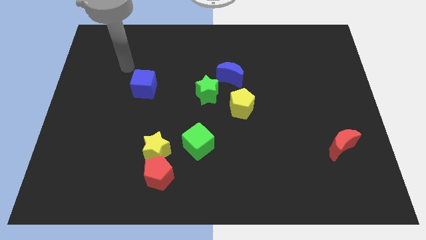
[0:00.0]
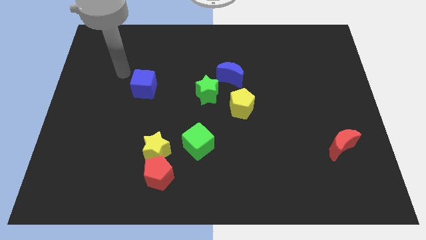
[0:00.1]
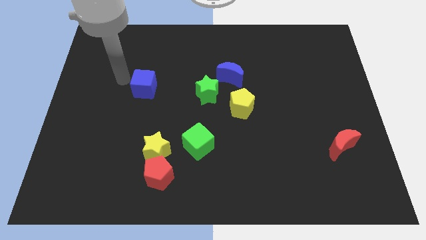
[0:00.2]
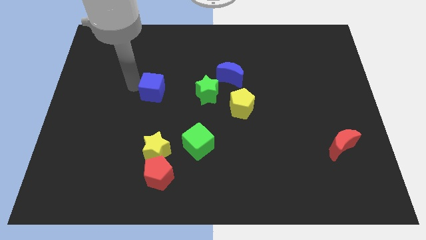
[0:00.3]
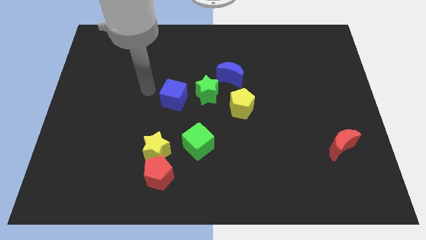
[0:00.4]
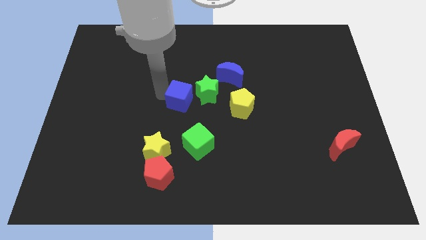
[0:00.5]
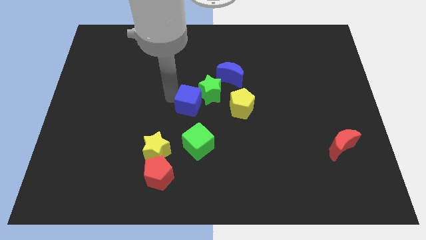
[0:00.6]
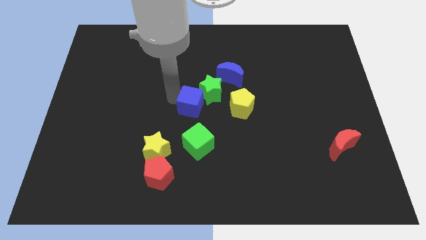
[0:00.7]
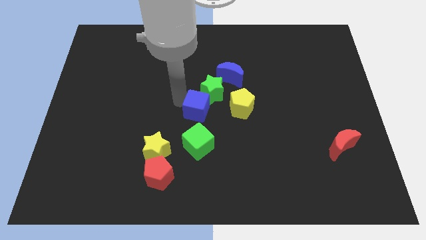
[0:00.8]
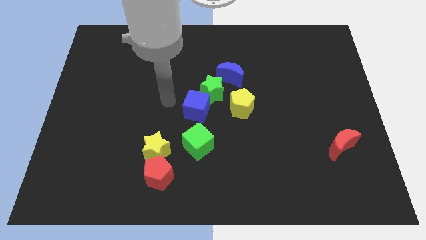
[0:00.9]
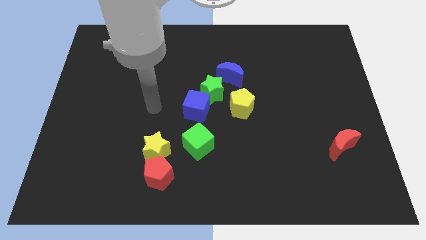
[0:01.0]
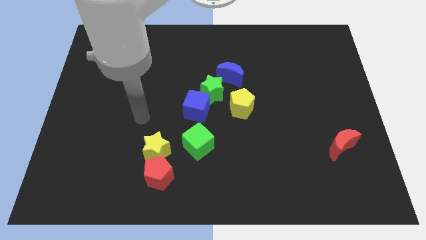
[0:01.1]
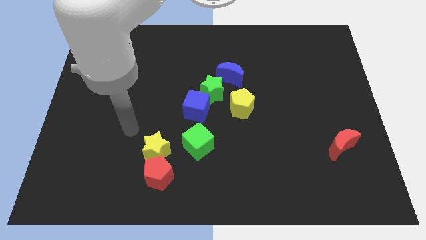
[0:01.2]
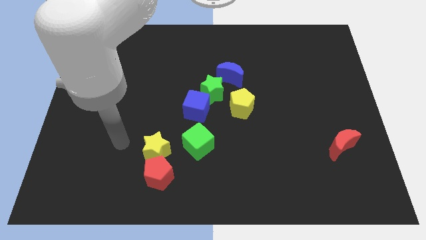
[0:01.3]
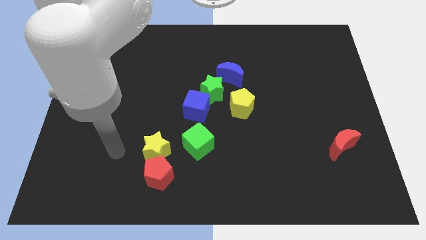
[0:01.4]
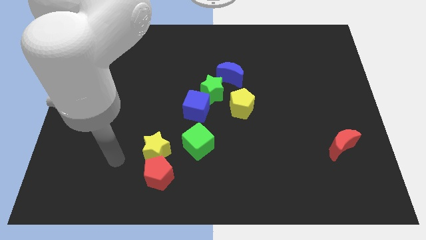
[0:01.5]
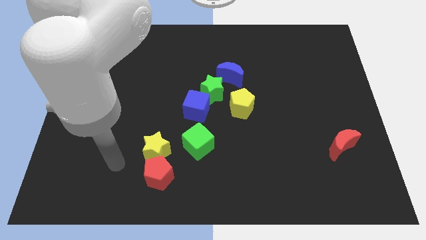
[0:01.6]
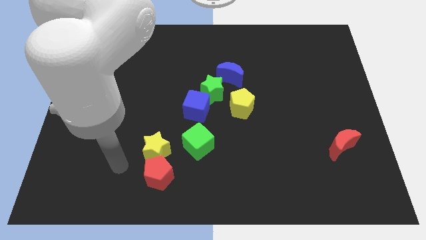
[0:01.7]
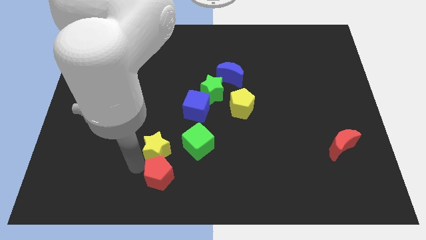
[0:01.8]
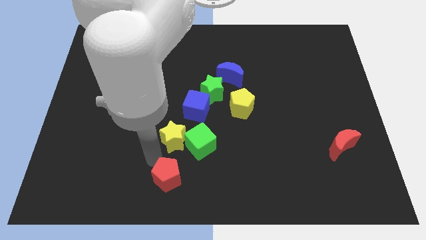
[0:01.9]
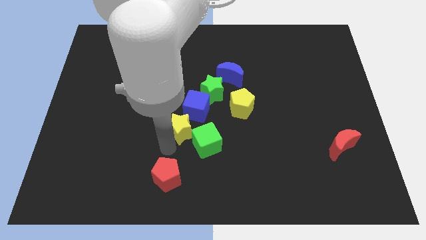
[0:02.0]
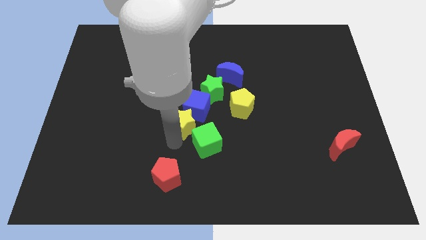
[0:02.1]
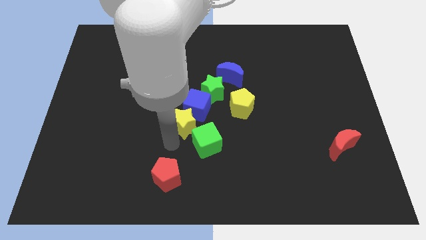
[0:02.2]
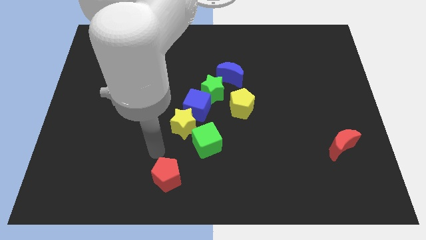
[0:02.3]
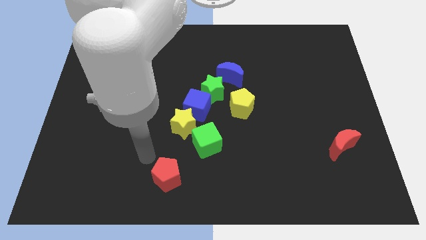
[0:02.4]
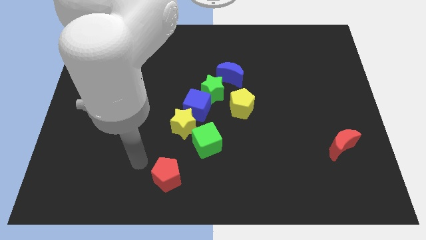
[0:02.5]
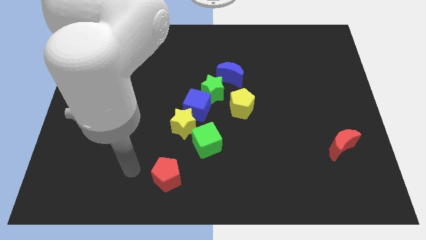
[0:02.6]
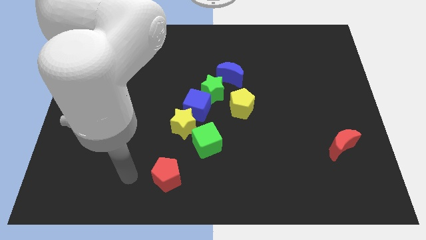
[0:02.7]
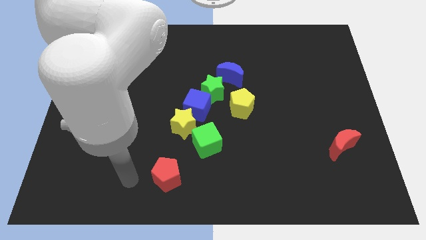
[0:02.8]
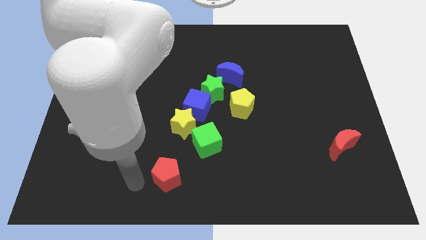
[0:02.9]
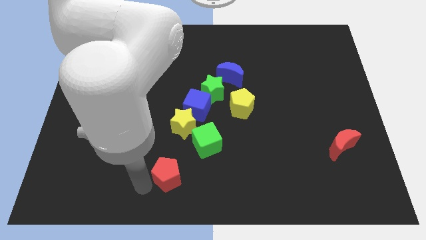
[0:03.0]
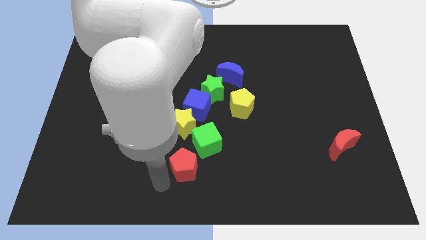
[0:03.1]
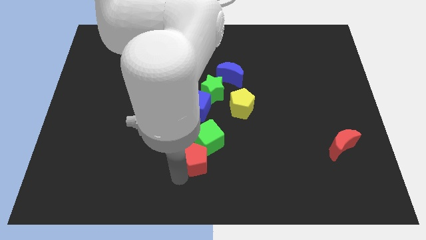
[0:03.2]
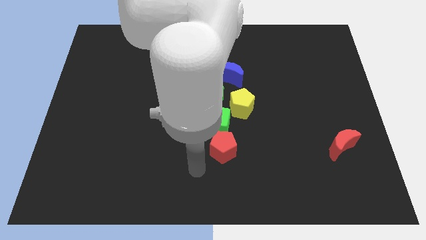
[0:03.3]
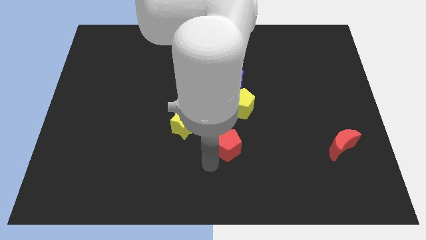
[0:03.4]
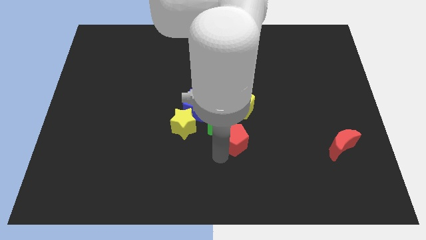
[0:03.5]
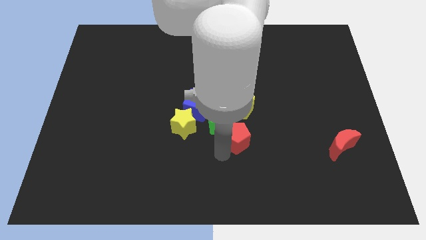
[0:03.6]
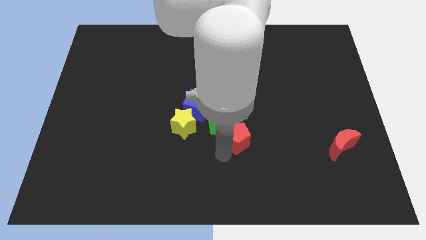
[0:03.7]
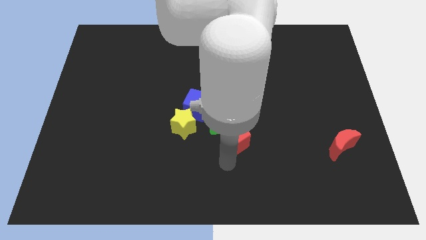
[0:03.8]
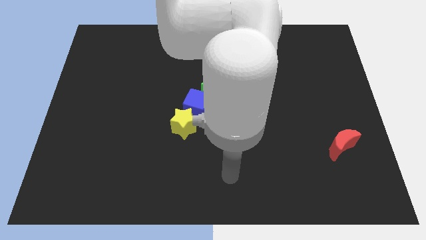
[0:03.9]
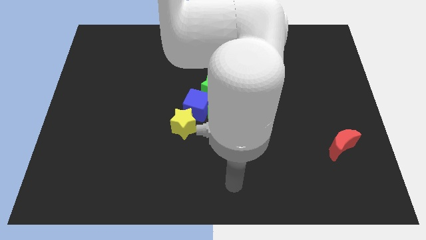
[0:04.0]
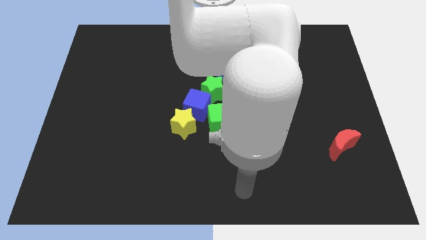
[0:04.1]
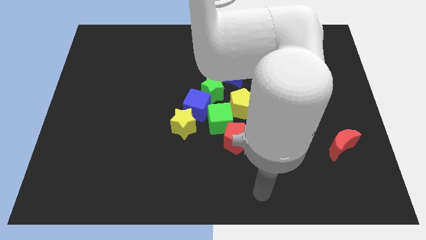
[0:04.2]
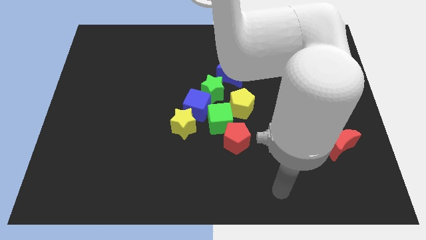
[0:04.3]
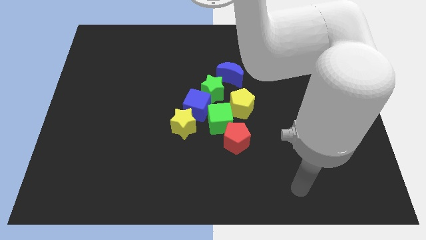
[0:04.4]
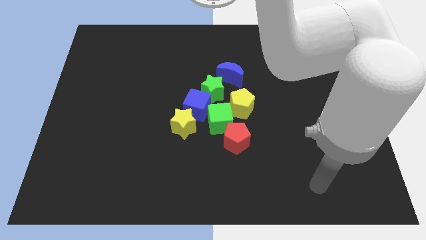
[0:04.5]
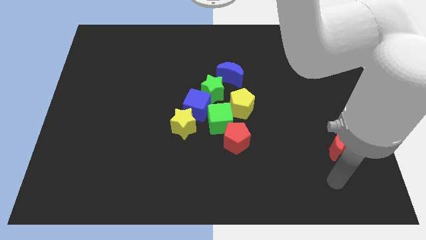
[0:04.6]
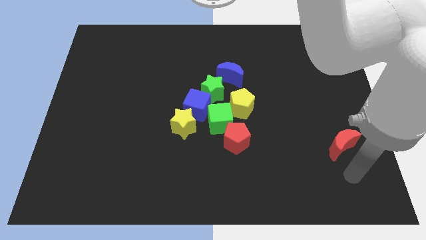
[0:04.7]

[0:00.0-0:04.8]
push a group of blocks to the center

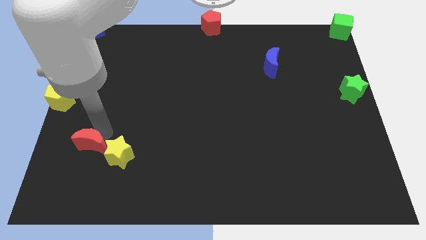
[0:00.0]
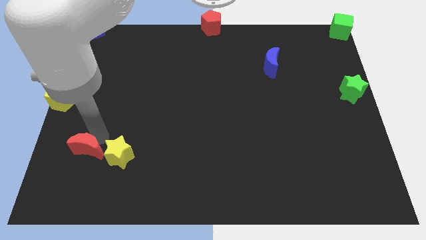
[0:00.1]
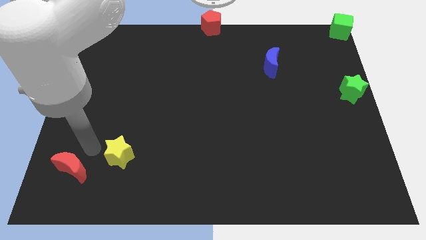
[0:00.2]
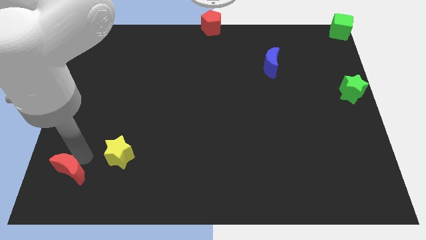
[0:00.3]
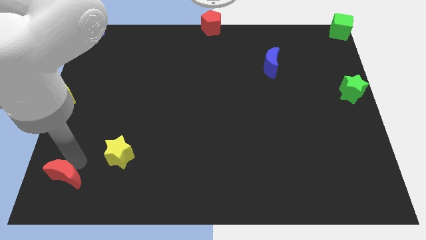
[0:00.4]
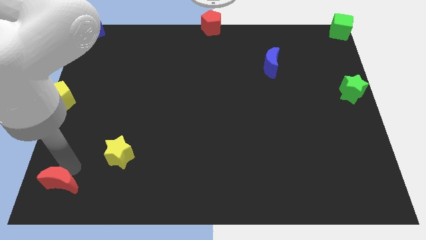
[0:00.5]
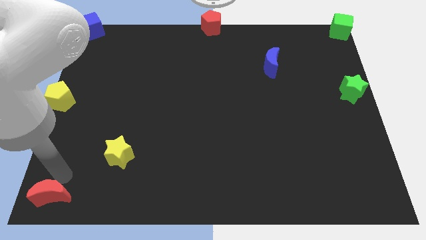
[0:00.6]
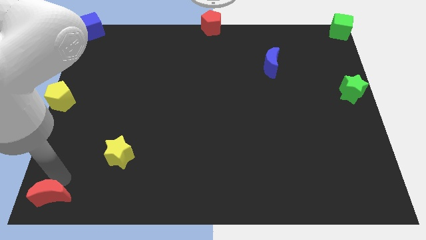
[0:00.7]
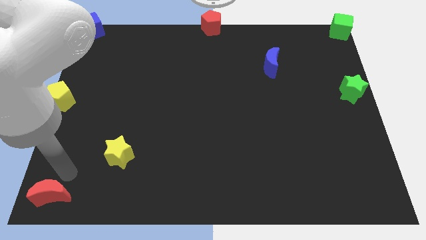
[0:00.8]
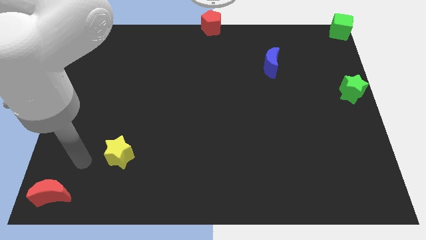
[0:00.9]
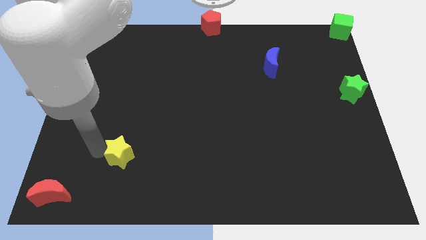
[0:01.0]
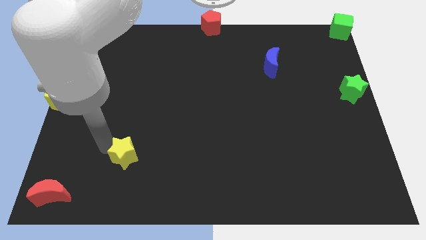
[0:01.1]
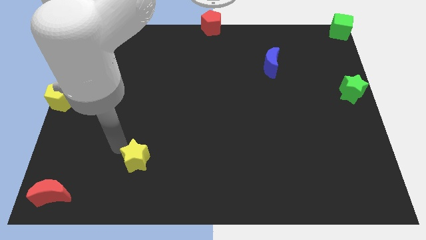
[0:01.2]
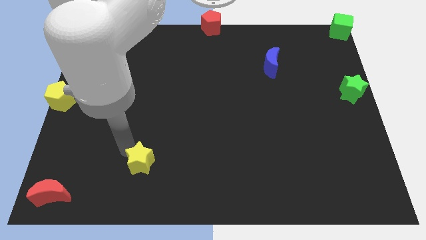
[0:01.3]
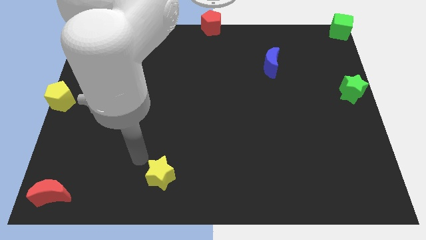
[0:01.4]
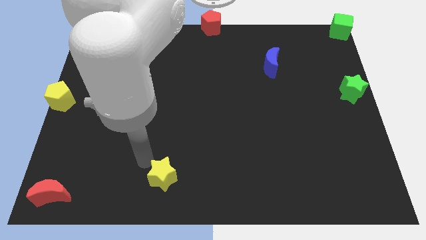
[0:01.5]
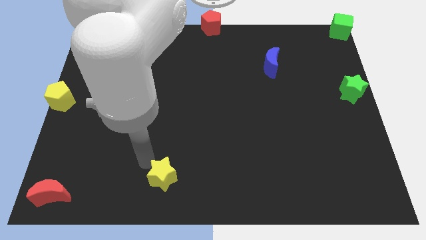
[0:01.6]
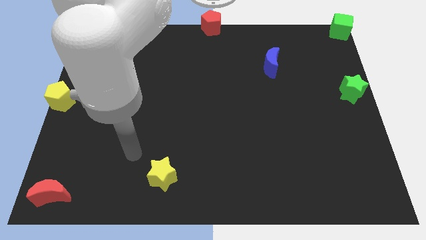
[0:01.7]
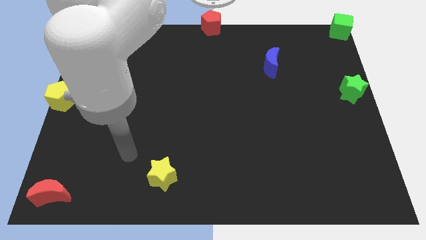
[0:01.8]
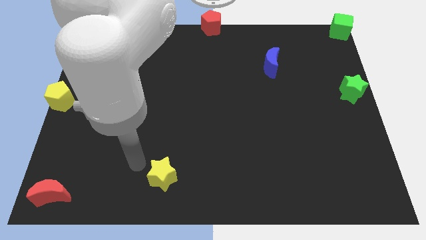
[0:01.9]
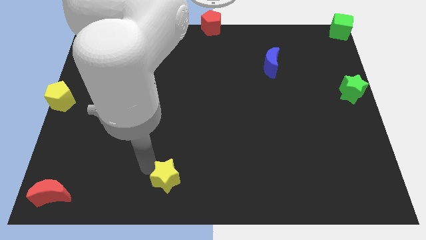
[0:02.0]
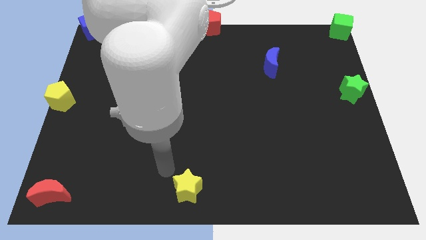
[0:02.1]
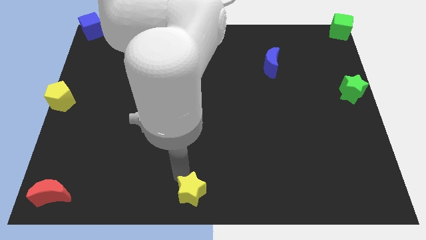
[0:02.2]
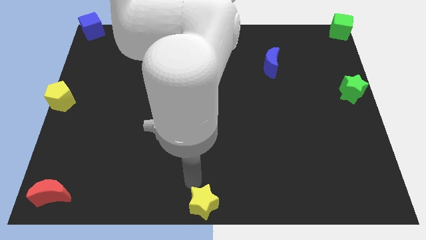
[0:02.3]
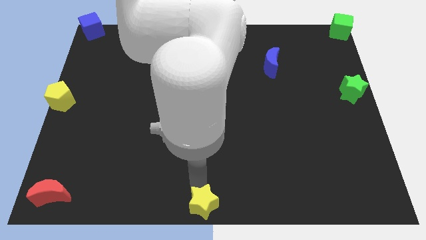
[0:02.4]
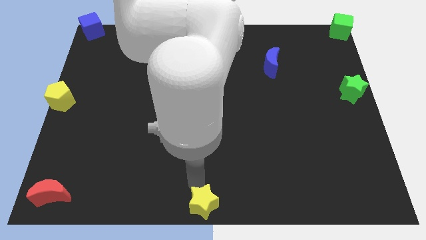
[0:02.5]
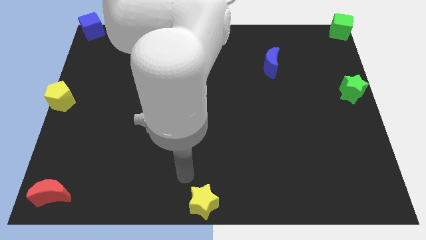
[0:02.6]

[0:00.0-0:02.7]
push the yellow star to the bottom center

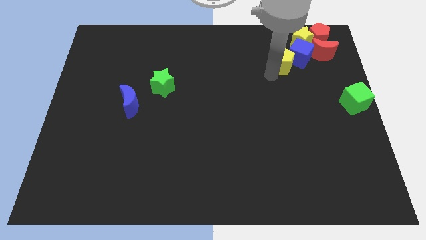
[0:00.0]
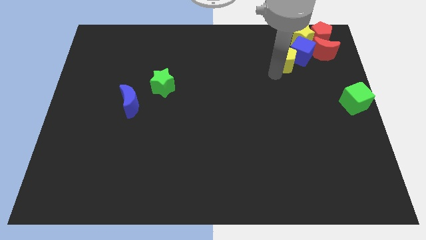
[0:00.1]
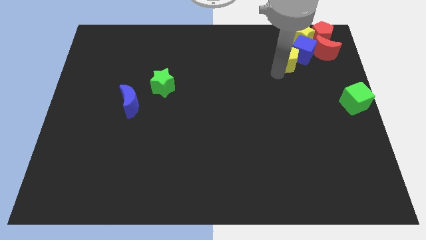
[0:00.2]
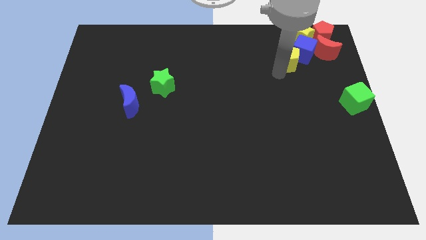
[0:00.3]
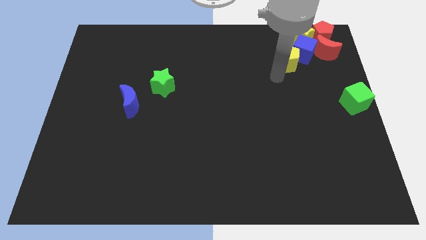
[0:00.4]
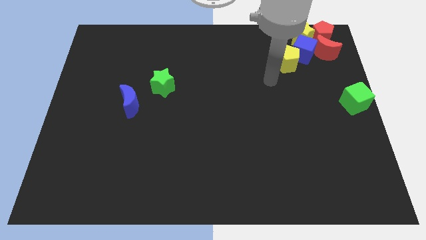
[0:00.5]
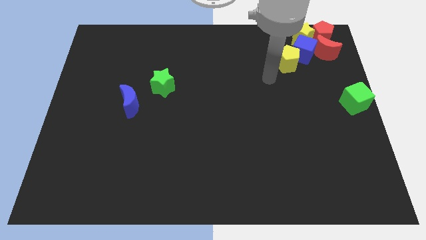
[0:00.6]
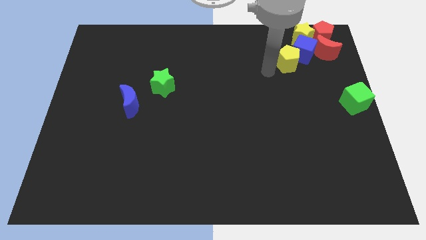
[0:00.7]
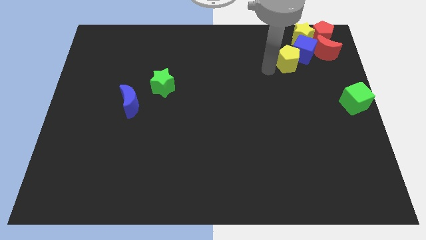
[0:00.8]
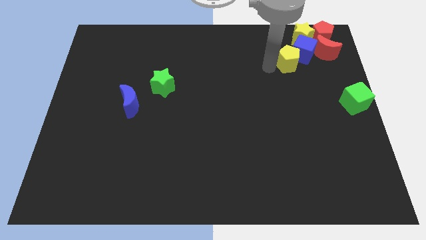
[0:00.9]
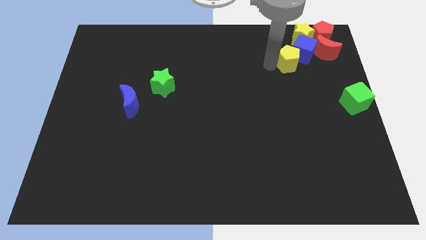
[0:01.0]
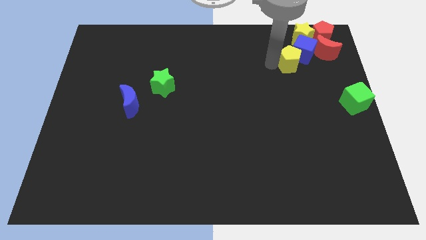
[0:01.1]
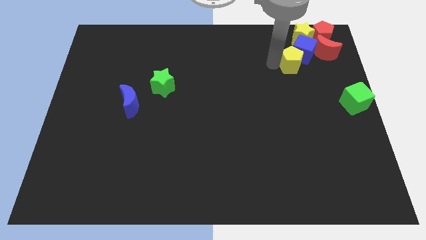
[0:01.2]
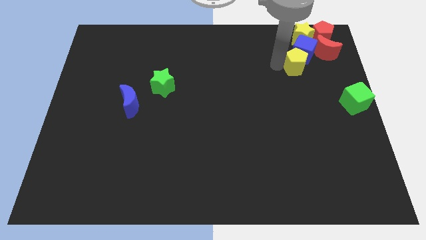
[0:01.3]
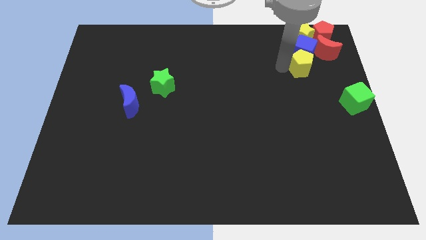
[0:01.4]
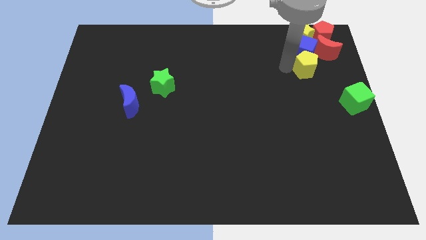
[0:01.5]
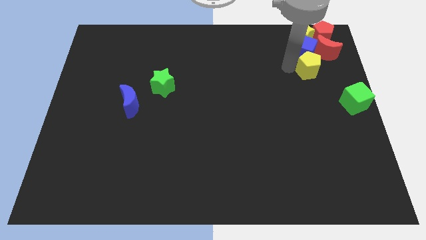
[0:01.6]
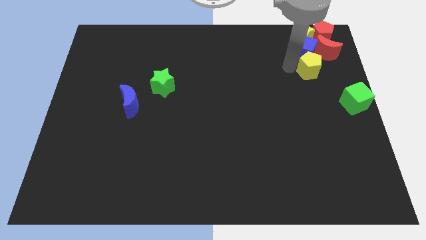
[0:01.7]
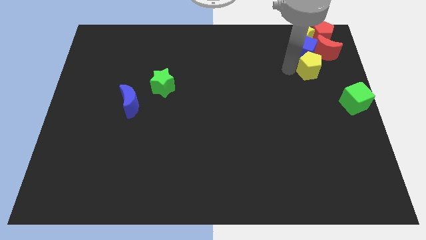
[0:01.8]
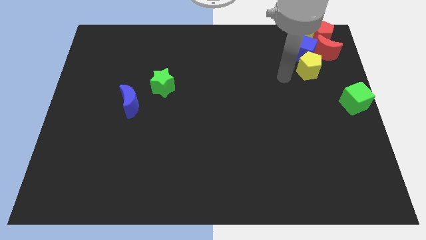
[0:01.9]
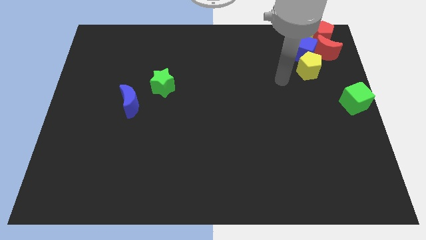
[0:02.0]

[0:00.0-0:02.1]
put the yellow pentagon below the blue cube
